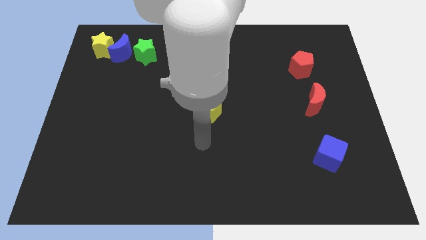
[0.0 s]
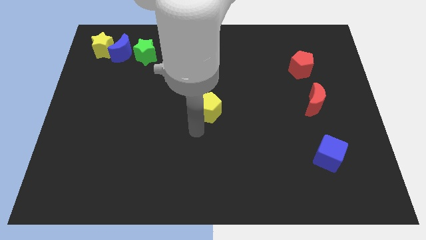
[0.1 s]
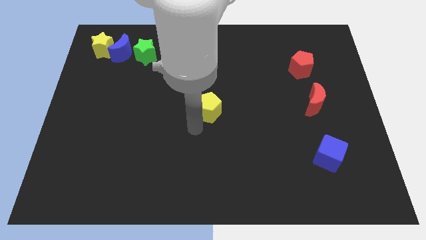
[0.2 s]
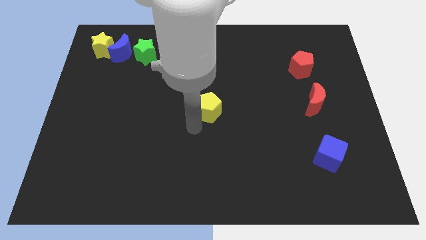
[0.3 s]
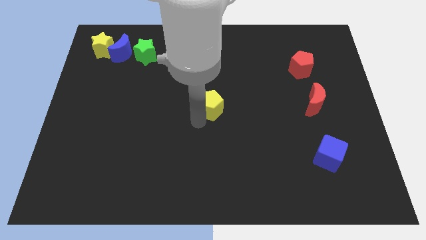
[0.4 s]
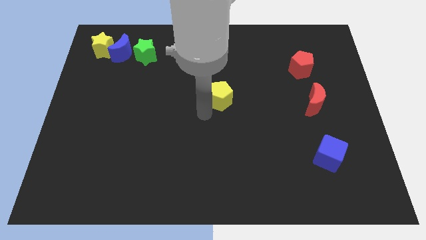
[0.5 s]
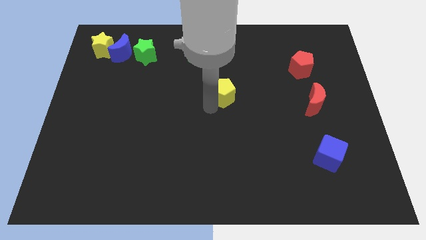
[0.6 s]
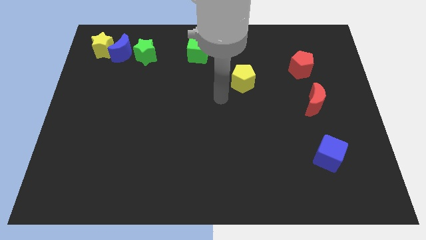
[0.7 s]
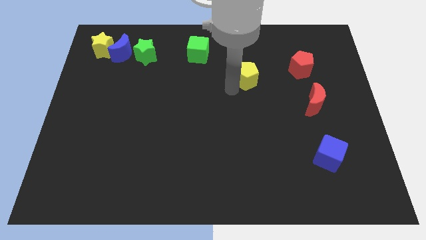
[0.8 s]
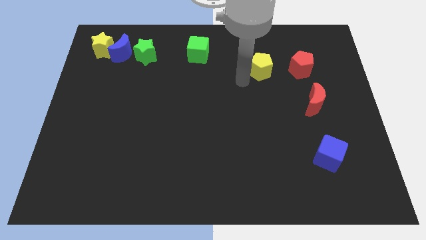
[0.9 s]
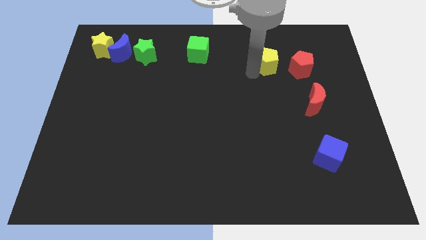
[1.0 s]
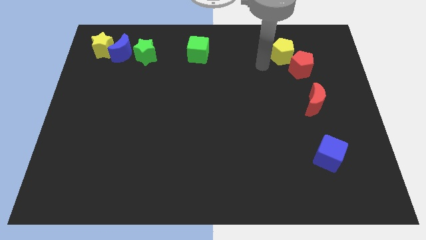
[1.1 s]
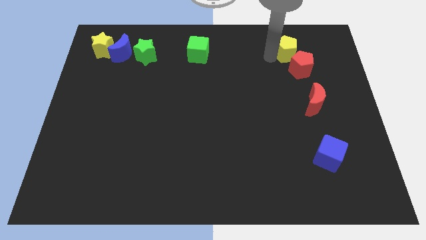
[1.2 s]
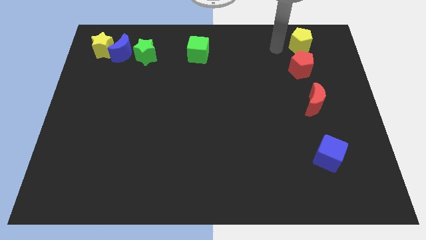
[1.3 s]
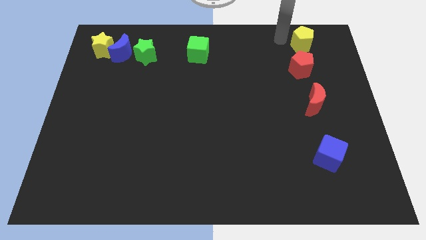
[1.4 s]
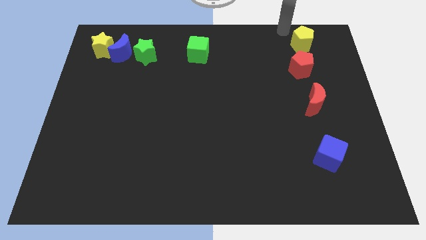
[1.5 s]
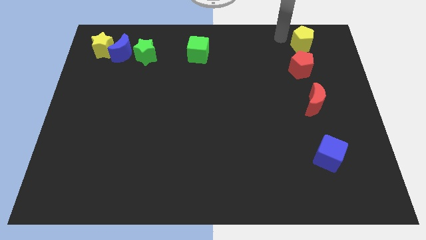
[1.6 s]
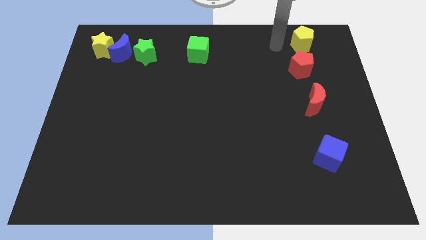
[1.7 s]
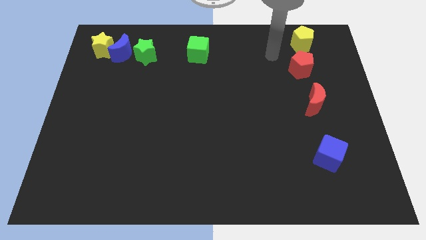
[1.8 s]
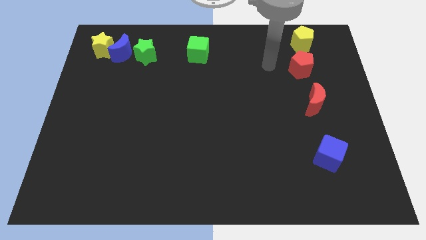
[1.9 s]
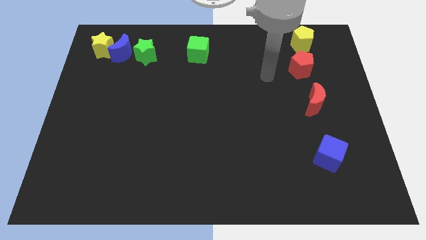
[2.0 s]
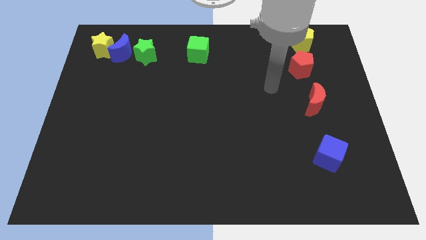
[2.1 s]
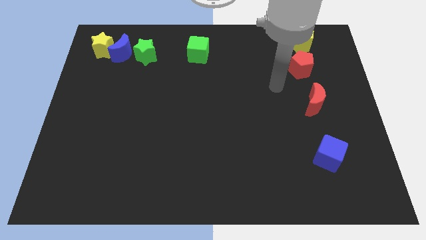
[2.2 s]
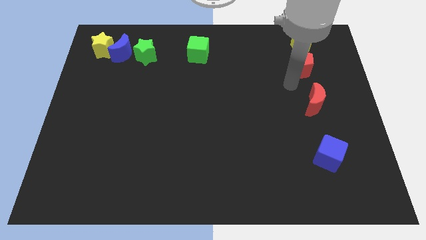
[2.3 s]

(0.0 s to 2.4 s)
move the yellow pentagon to the top of the red pentagon

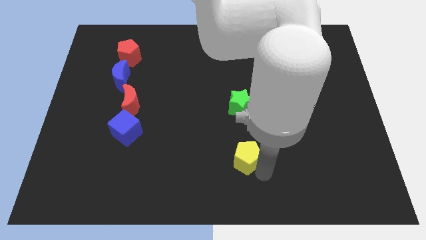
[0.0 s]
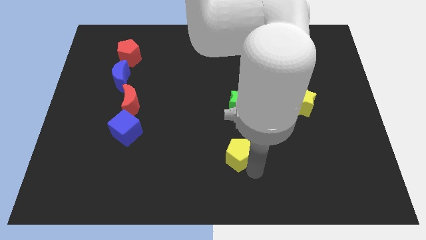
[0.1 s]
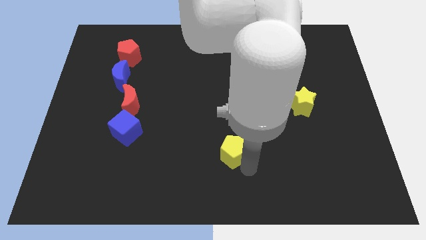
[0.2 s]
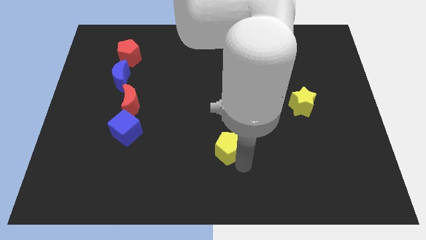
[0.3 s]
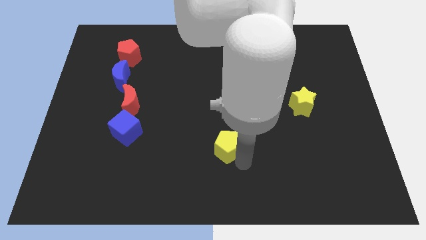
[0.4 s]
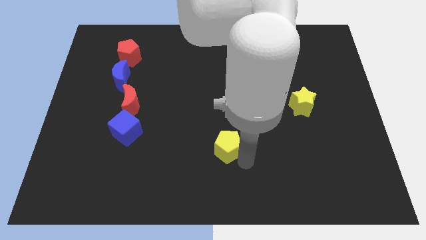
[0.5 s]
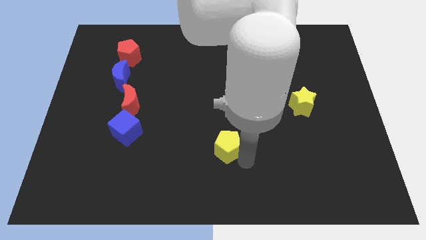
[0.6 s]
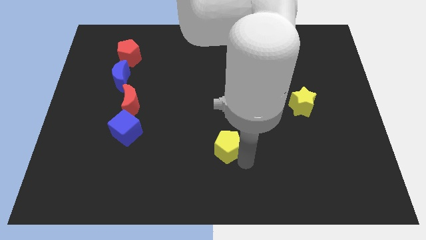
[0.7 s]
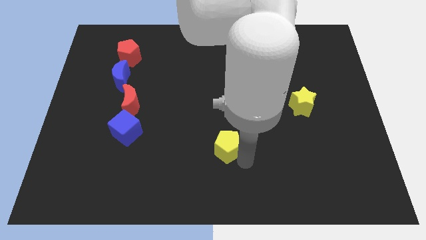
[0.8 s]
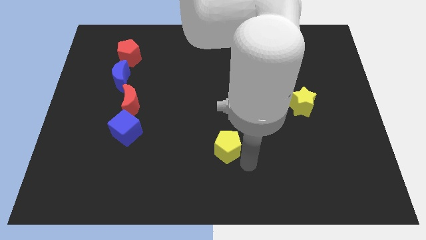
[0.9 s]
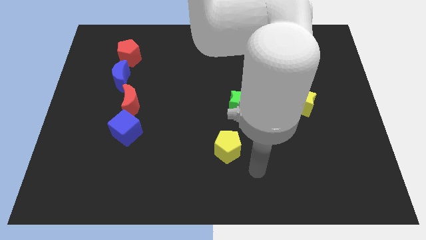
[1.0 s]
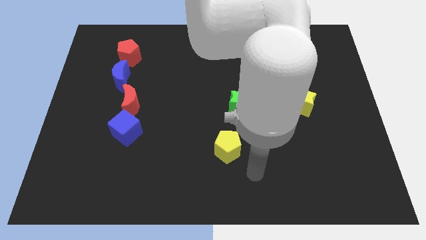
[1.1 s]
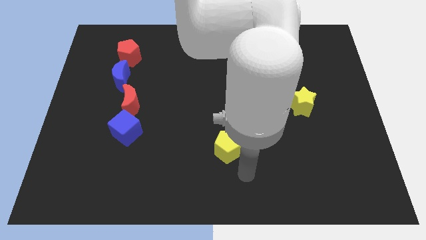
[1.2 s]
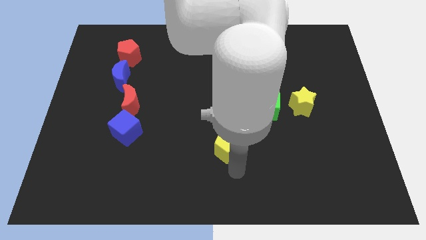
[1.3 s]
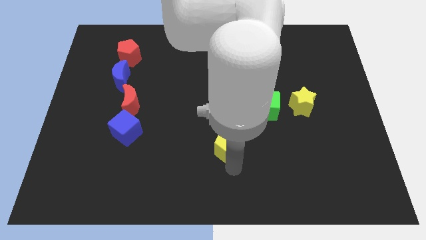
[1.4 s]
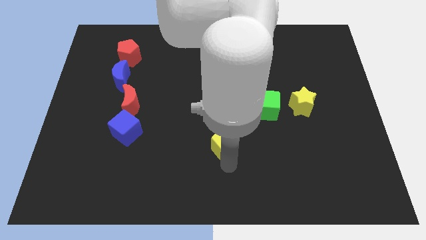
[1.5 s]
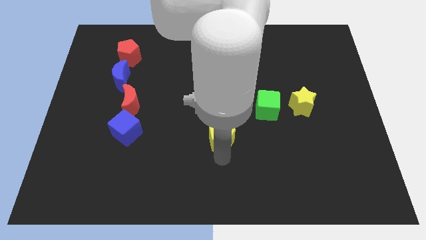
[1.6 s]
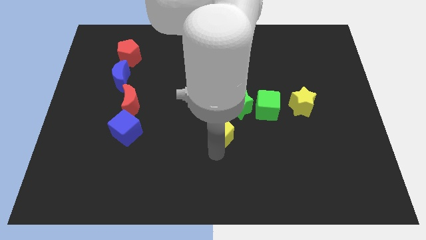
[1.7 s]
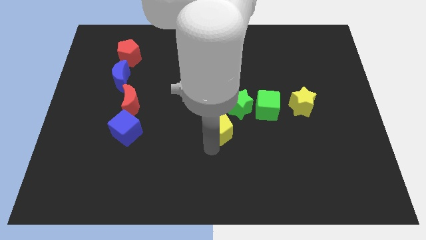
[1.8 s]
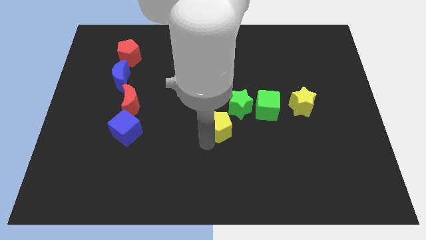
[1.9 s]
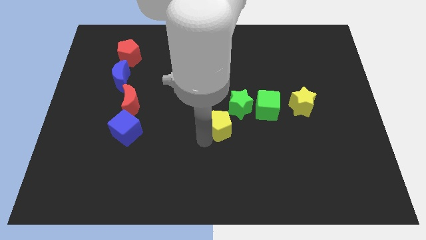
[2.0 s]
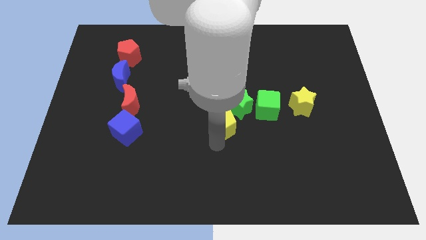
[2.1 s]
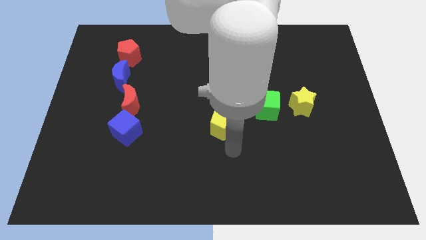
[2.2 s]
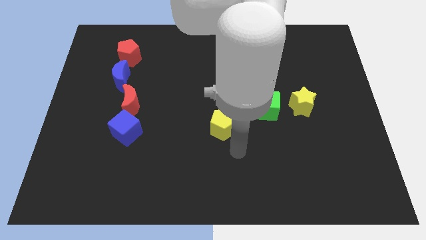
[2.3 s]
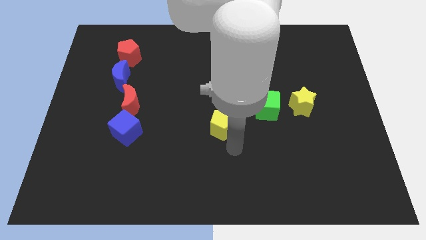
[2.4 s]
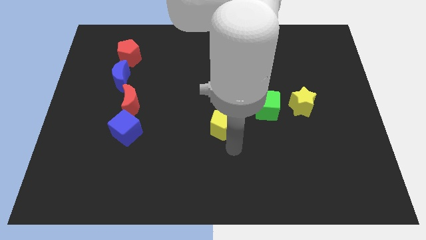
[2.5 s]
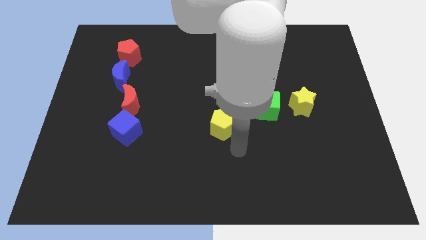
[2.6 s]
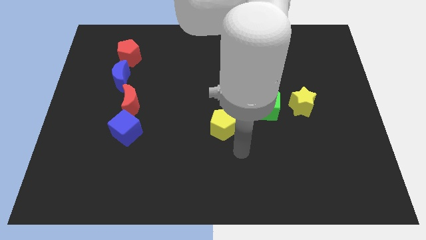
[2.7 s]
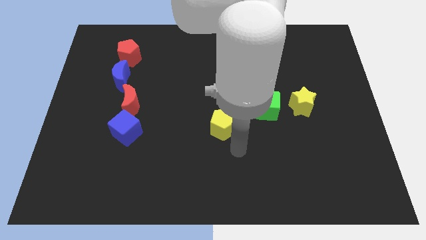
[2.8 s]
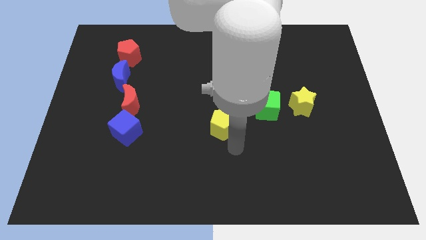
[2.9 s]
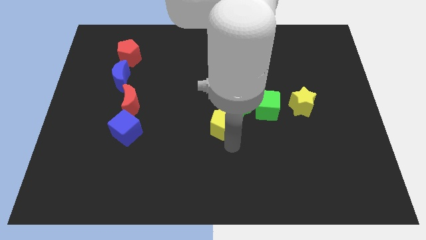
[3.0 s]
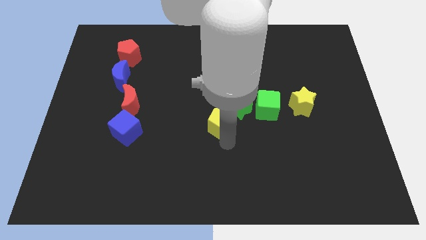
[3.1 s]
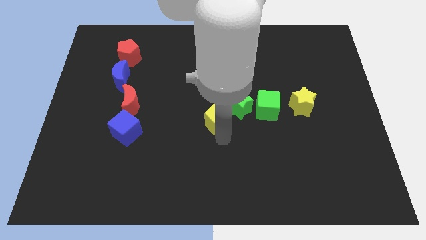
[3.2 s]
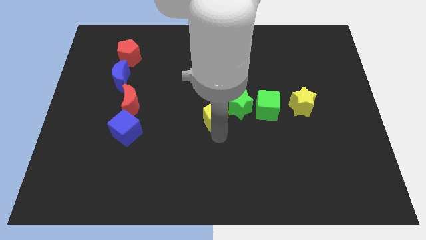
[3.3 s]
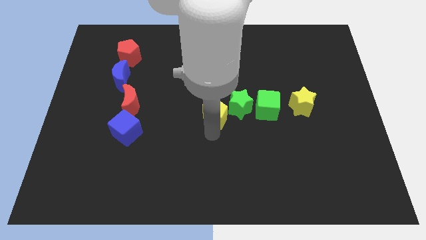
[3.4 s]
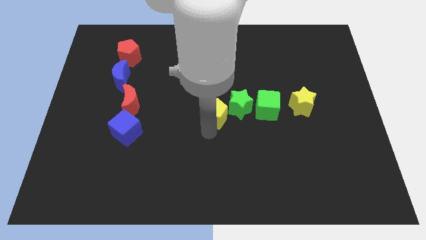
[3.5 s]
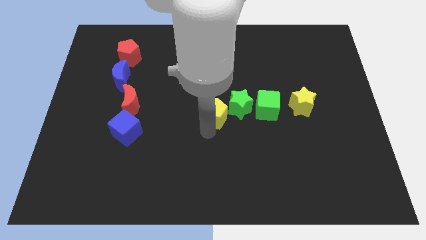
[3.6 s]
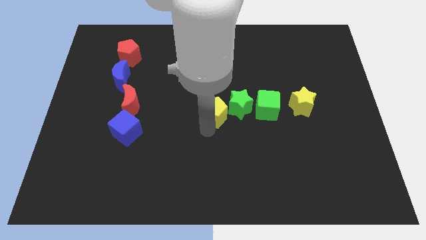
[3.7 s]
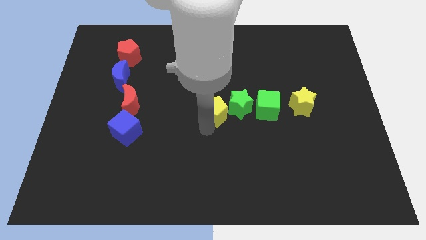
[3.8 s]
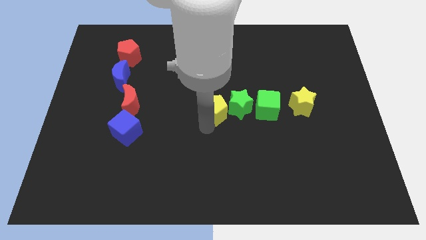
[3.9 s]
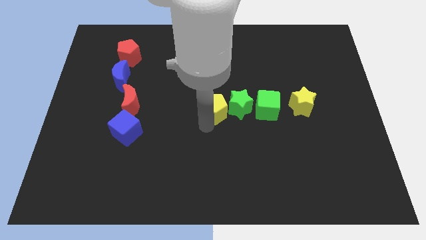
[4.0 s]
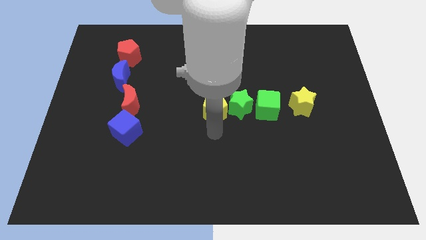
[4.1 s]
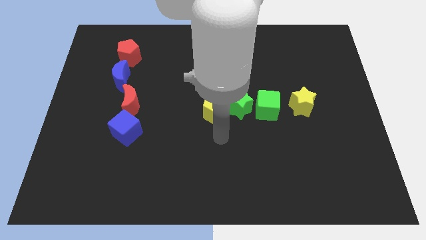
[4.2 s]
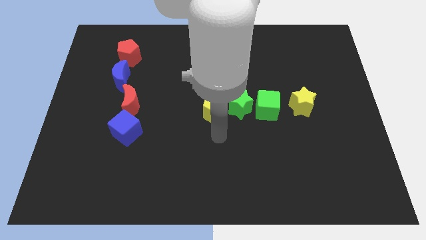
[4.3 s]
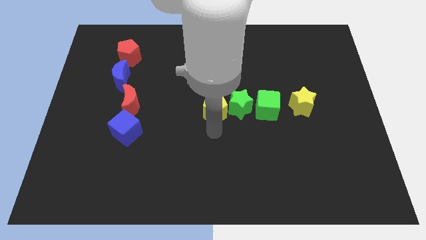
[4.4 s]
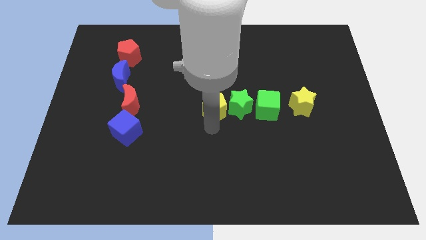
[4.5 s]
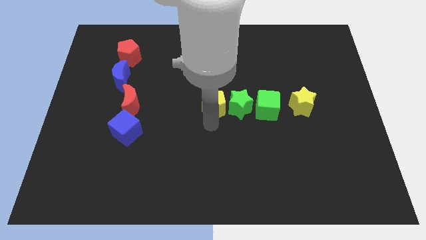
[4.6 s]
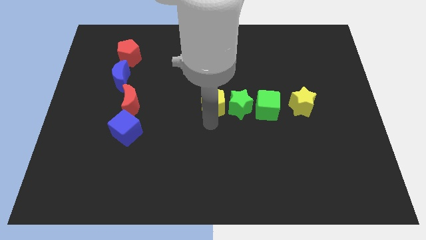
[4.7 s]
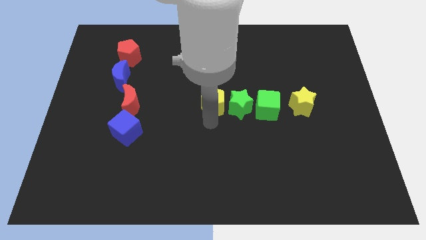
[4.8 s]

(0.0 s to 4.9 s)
put the yellow pentagon to the left of the green star

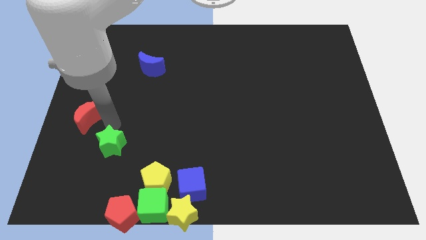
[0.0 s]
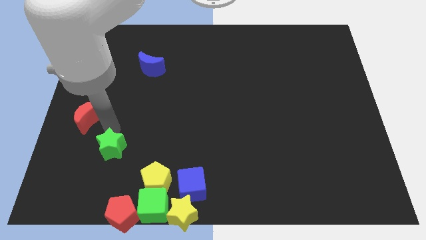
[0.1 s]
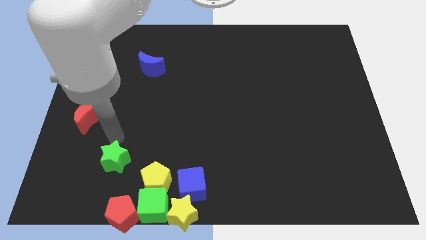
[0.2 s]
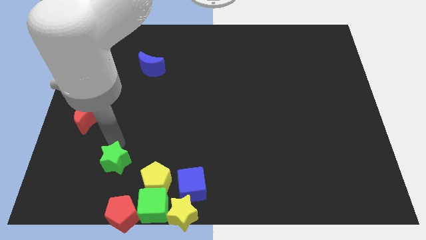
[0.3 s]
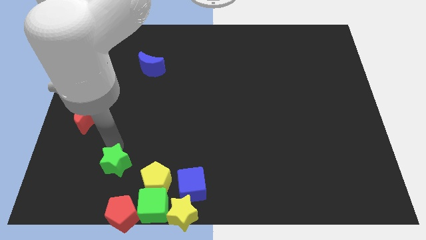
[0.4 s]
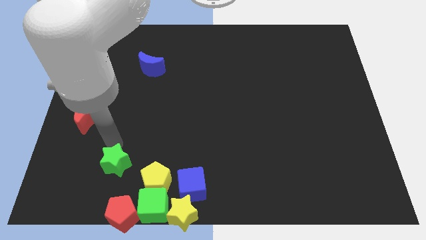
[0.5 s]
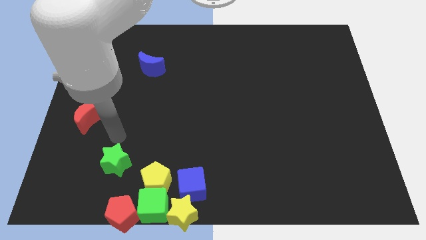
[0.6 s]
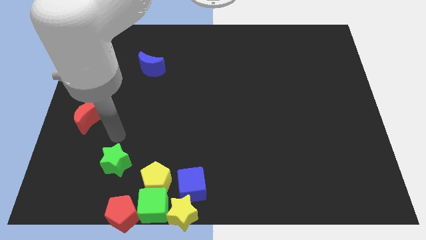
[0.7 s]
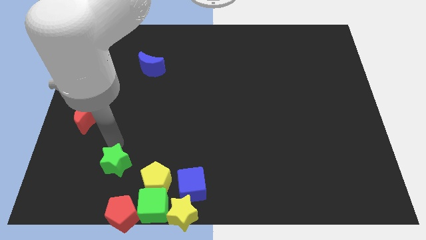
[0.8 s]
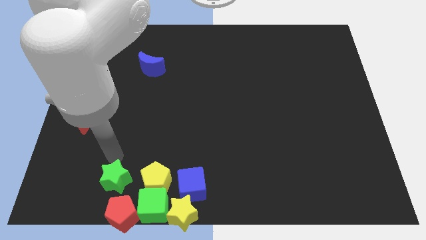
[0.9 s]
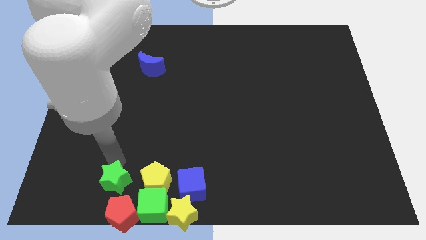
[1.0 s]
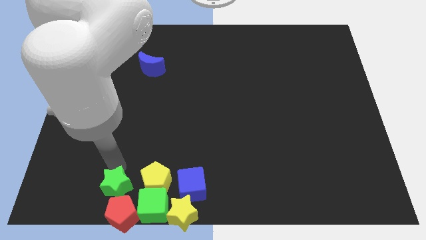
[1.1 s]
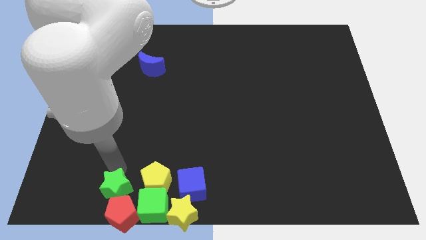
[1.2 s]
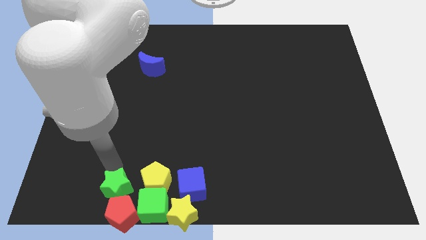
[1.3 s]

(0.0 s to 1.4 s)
move the green star towards the red pentagon

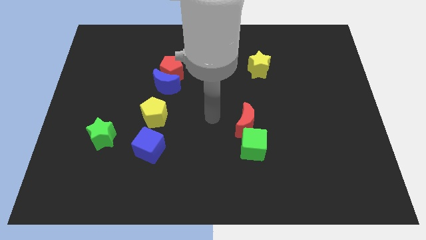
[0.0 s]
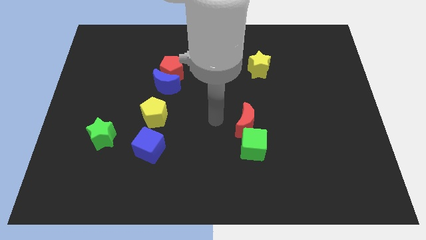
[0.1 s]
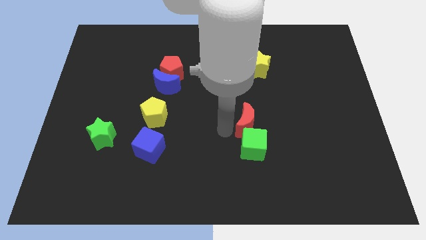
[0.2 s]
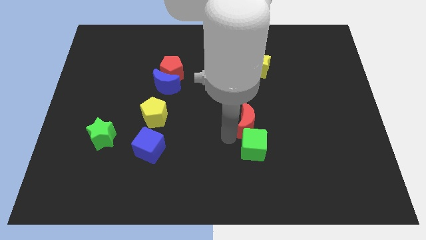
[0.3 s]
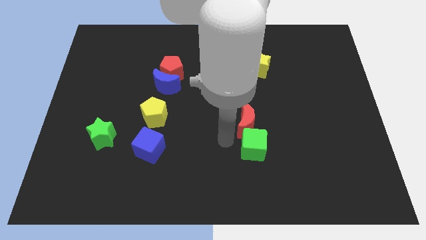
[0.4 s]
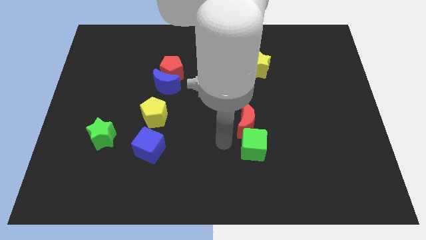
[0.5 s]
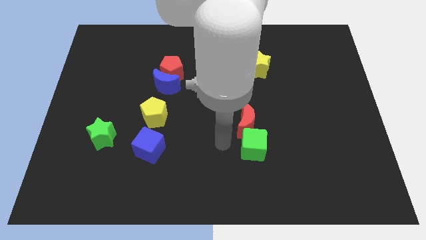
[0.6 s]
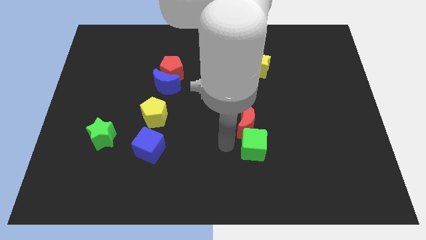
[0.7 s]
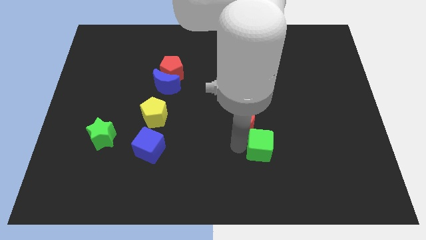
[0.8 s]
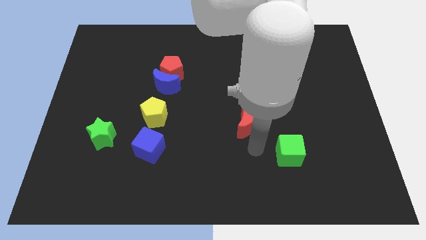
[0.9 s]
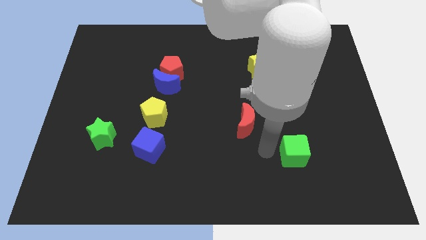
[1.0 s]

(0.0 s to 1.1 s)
separate the green cube from the red crescent
